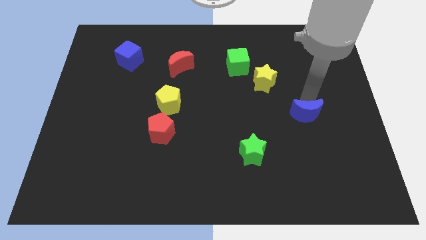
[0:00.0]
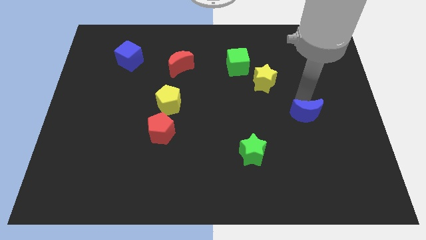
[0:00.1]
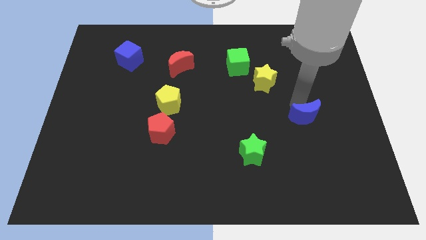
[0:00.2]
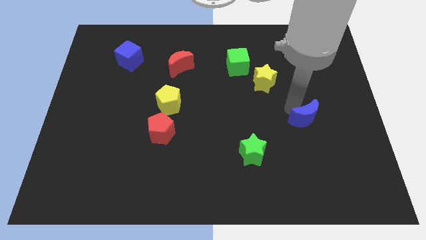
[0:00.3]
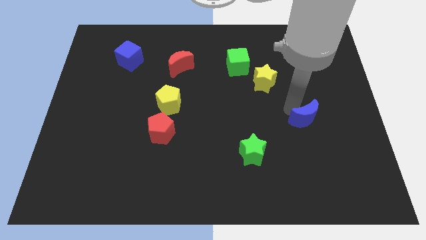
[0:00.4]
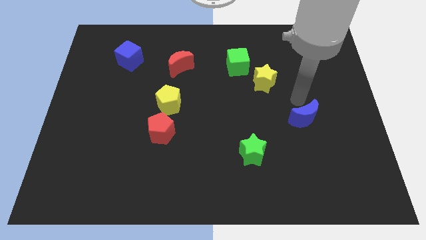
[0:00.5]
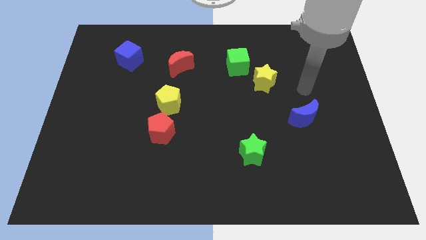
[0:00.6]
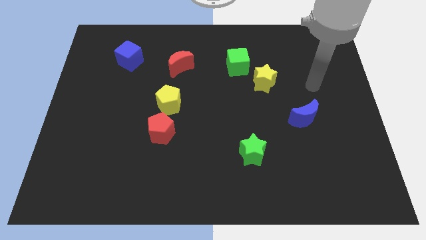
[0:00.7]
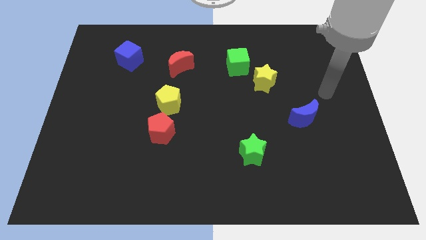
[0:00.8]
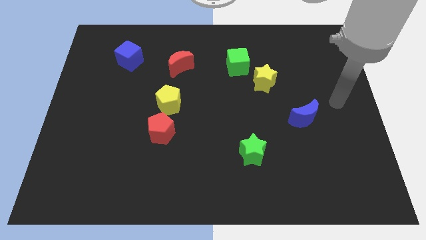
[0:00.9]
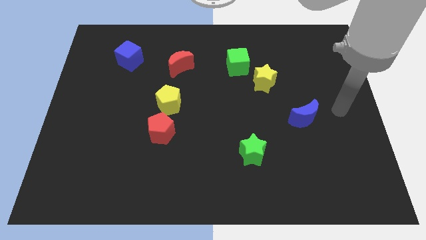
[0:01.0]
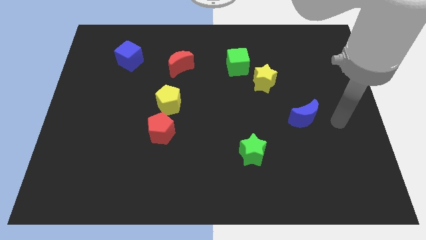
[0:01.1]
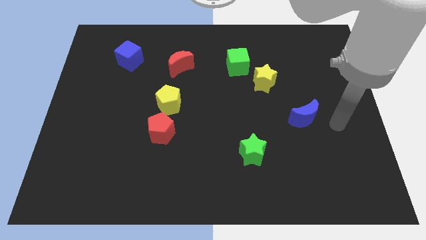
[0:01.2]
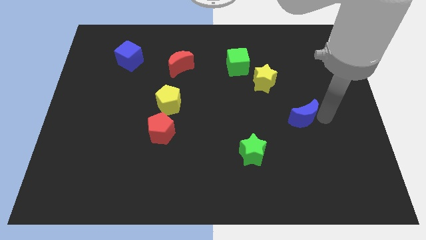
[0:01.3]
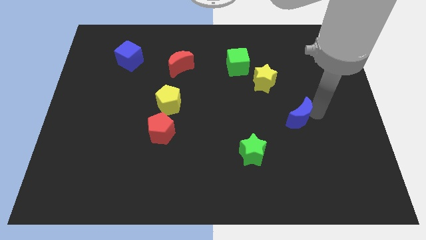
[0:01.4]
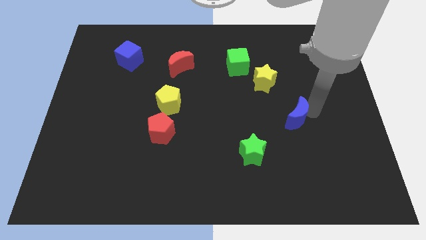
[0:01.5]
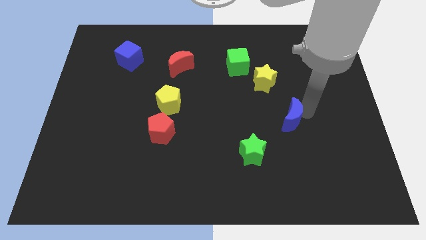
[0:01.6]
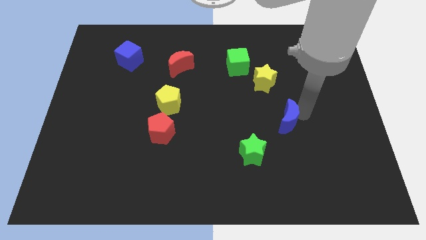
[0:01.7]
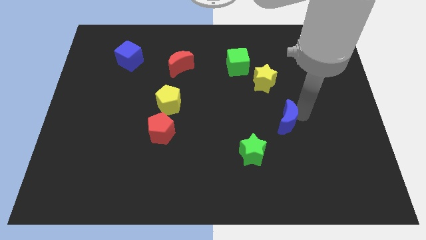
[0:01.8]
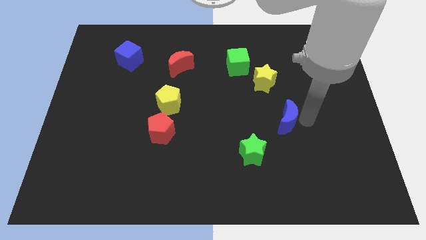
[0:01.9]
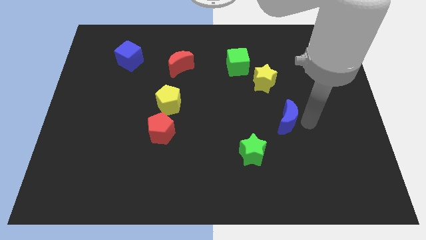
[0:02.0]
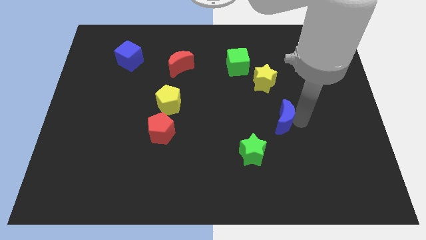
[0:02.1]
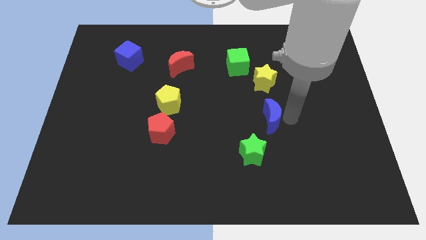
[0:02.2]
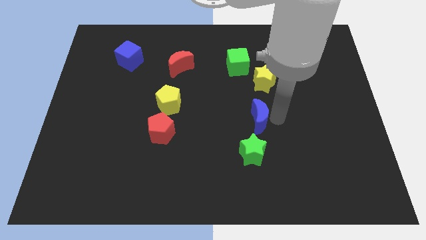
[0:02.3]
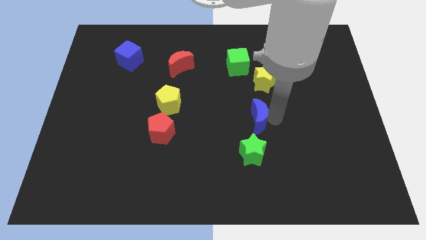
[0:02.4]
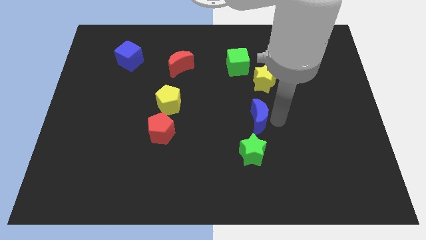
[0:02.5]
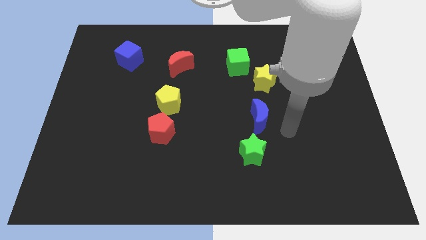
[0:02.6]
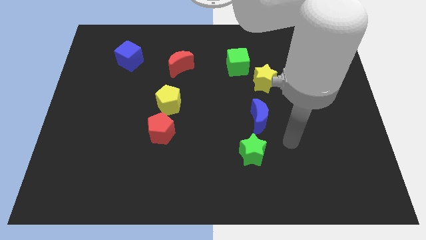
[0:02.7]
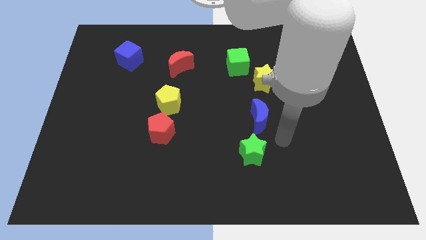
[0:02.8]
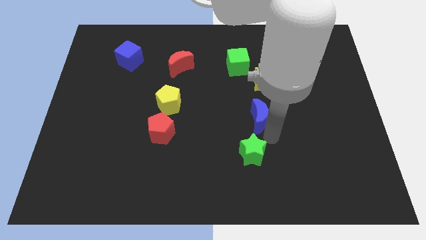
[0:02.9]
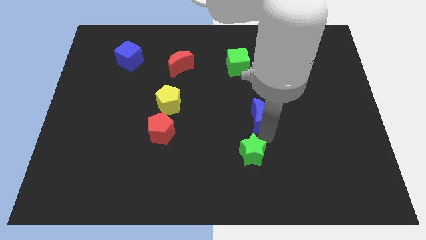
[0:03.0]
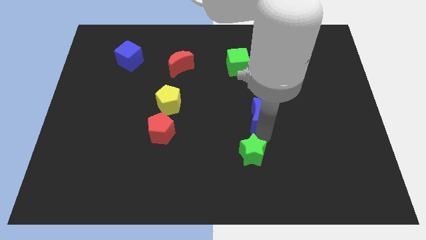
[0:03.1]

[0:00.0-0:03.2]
place the blue crescent between the green star and yellow star

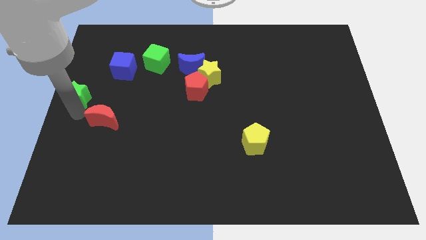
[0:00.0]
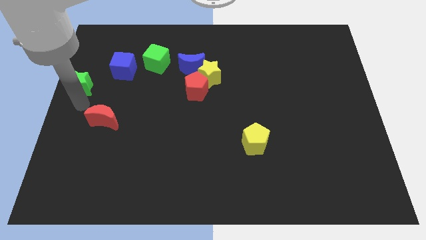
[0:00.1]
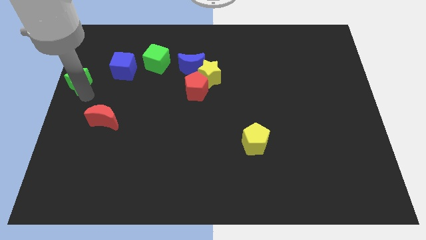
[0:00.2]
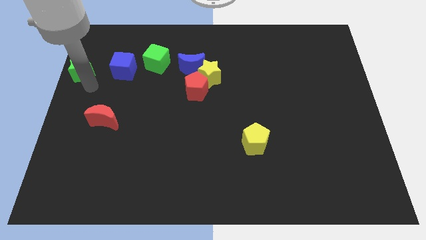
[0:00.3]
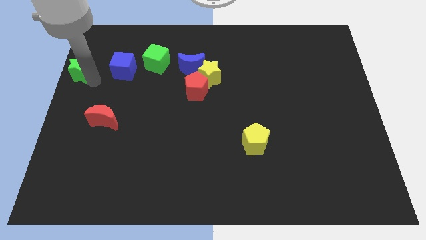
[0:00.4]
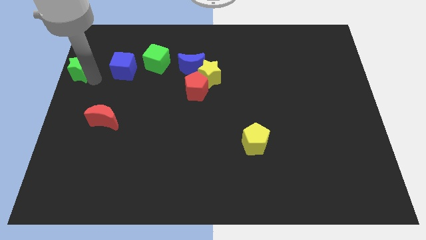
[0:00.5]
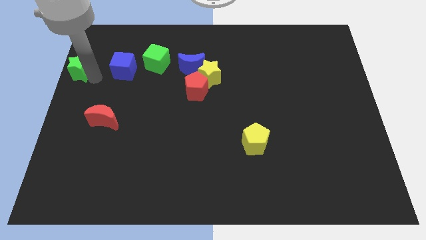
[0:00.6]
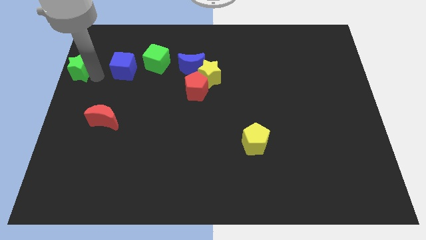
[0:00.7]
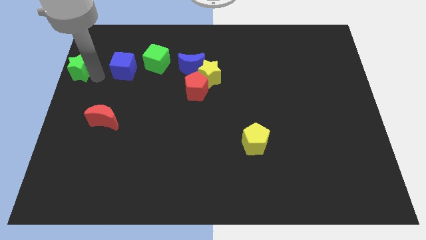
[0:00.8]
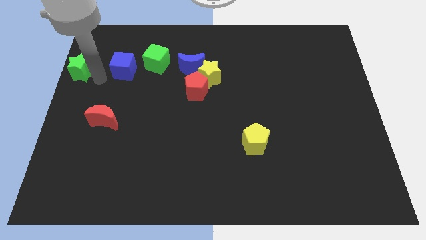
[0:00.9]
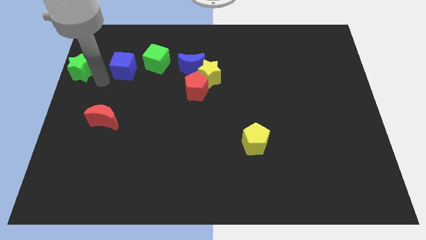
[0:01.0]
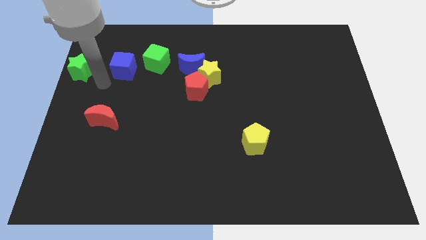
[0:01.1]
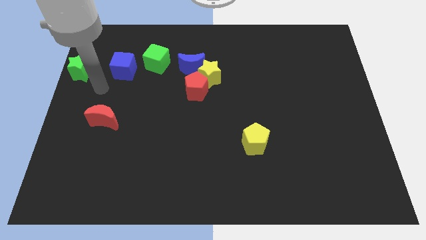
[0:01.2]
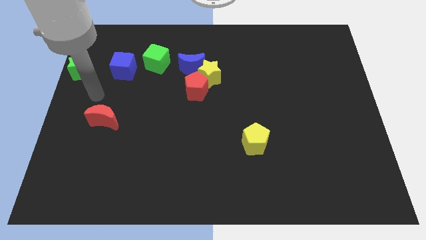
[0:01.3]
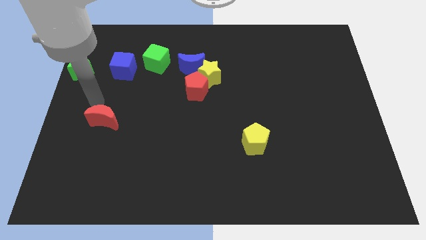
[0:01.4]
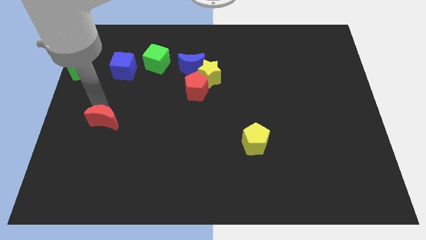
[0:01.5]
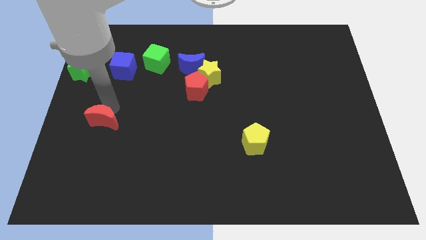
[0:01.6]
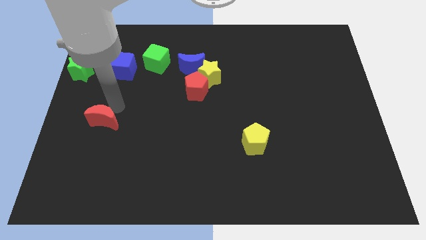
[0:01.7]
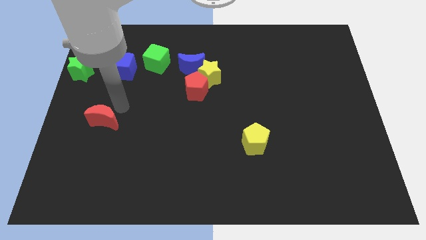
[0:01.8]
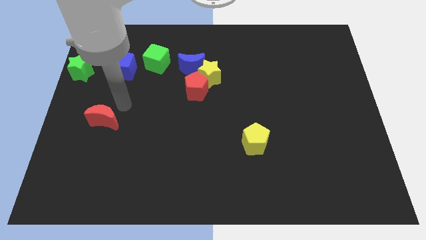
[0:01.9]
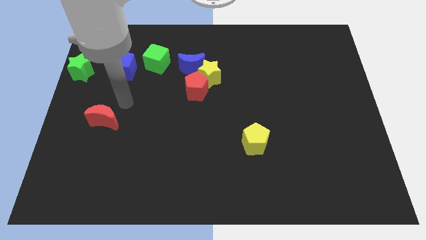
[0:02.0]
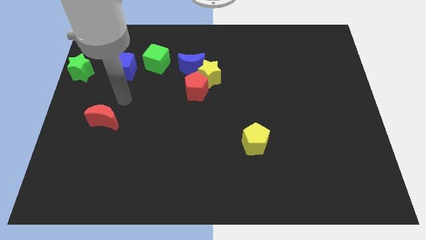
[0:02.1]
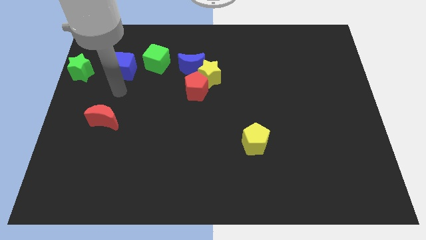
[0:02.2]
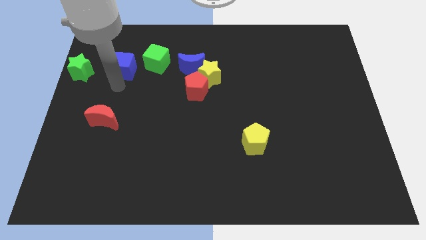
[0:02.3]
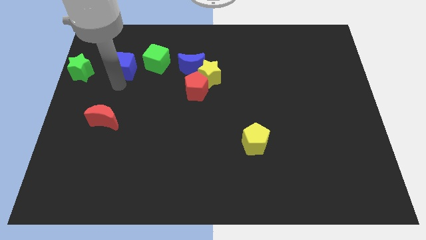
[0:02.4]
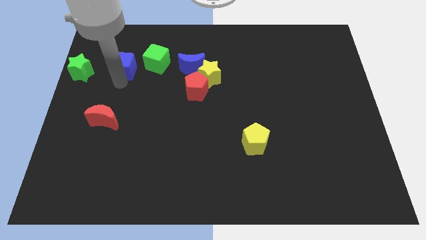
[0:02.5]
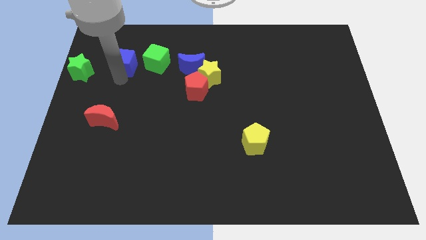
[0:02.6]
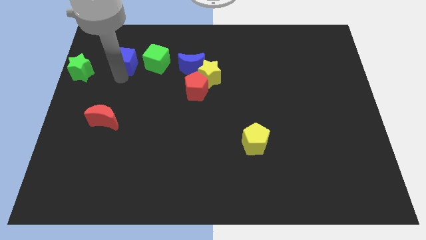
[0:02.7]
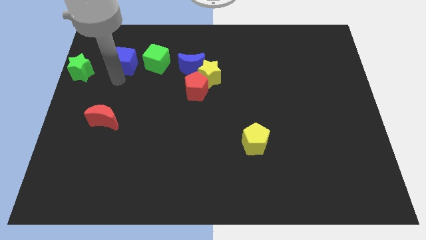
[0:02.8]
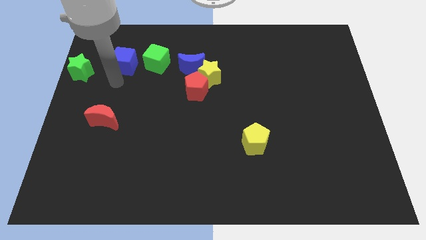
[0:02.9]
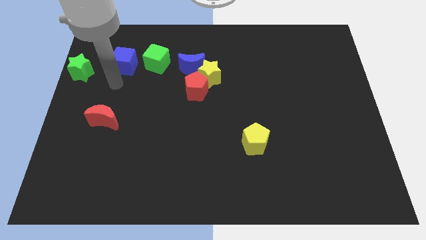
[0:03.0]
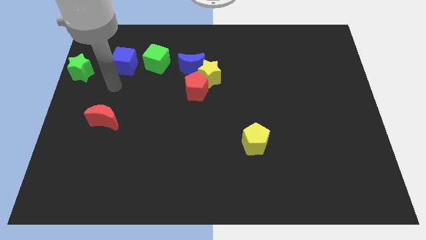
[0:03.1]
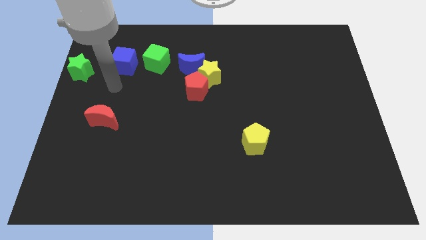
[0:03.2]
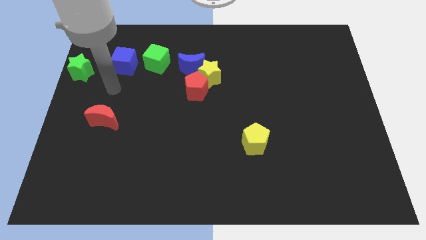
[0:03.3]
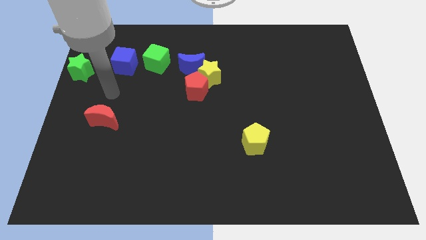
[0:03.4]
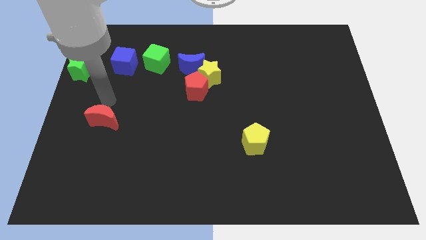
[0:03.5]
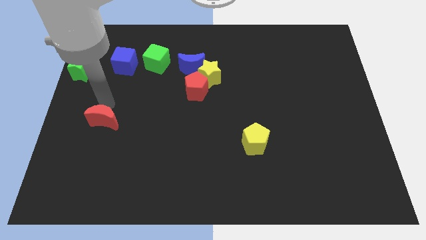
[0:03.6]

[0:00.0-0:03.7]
place the arm above the red moon

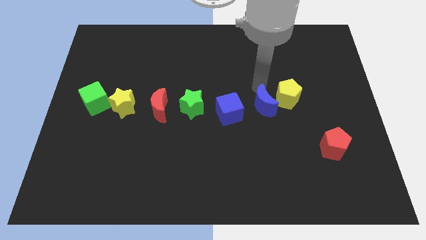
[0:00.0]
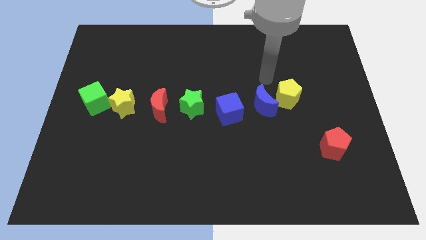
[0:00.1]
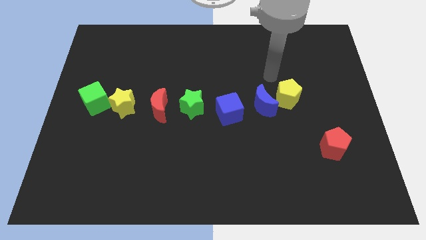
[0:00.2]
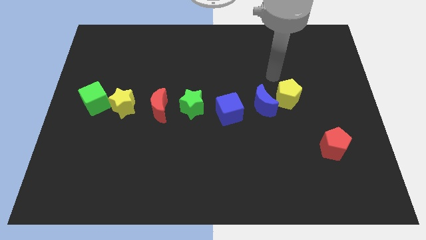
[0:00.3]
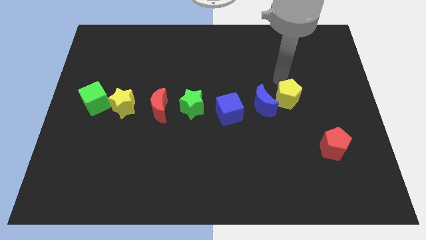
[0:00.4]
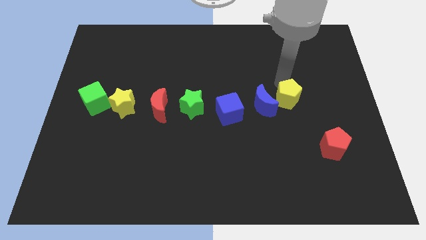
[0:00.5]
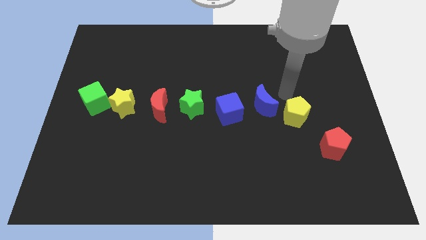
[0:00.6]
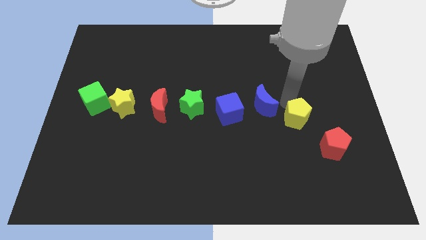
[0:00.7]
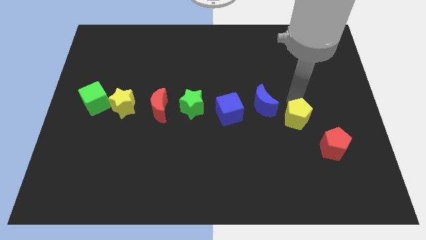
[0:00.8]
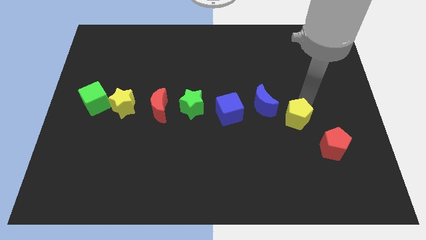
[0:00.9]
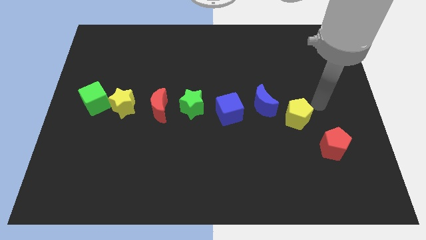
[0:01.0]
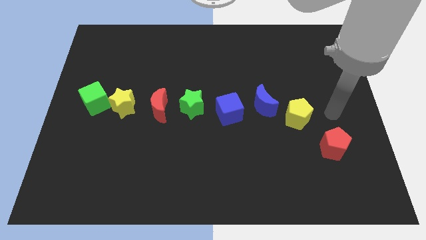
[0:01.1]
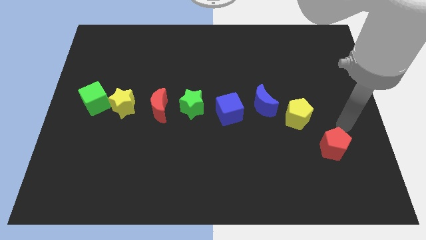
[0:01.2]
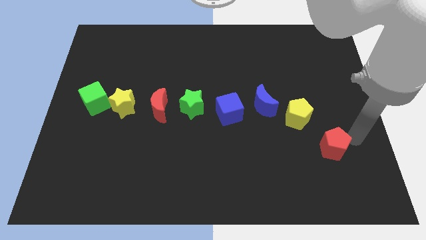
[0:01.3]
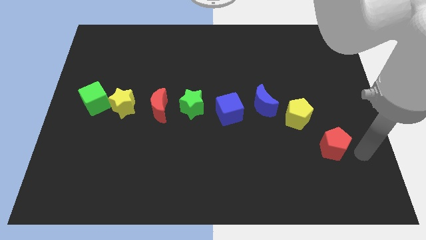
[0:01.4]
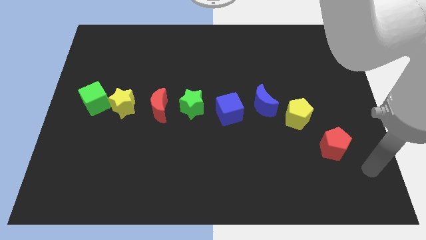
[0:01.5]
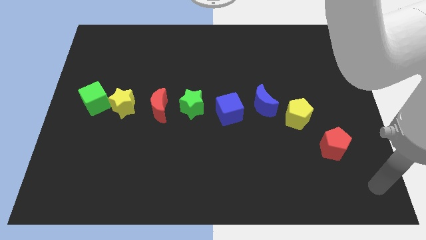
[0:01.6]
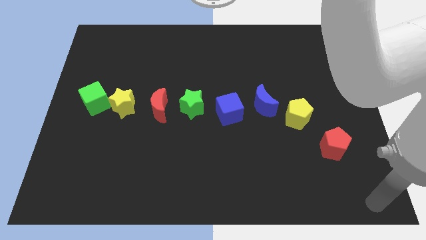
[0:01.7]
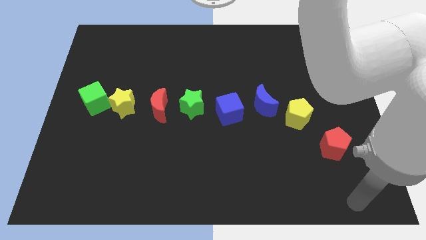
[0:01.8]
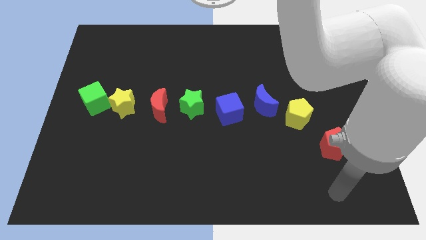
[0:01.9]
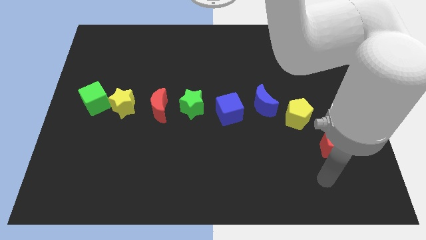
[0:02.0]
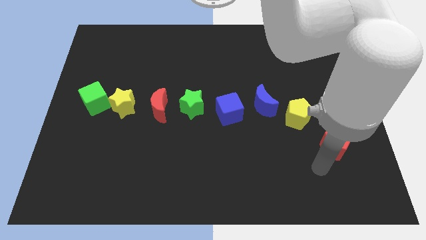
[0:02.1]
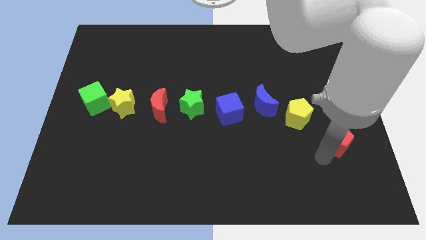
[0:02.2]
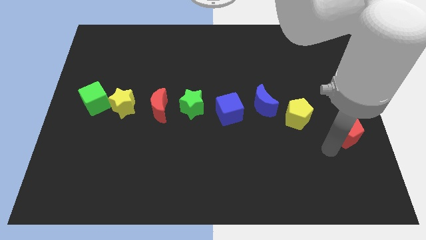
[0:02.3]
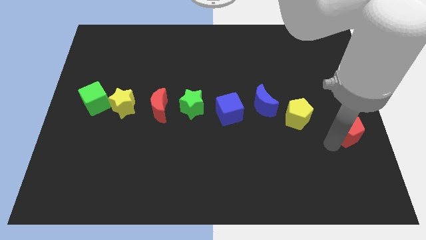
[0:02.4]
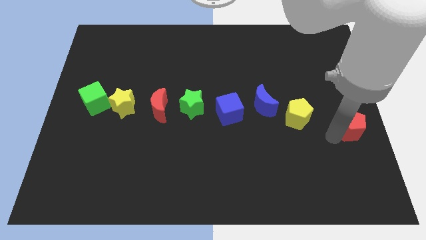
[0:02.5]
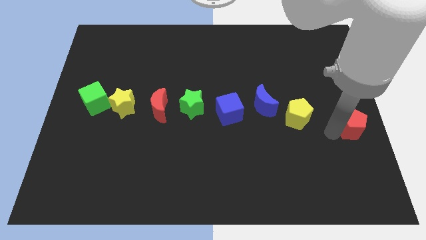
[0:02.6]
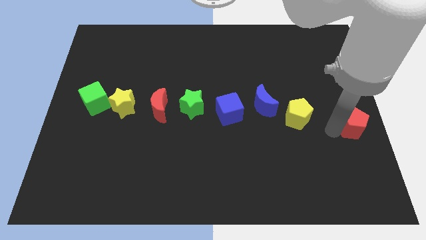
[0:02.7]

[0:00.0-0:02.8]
push the red pentagon to the right center of the board
